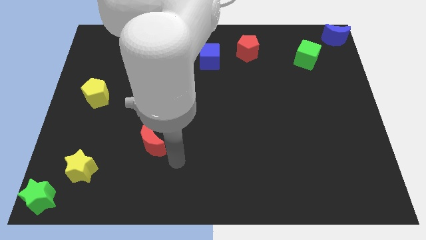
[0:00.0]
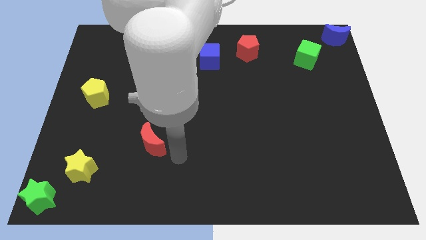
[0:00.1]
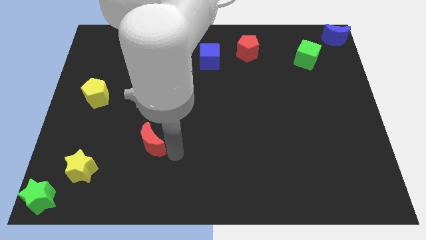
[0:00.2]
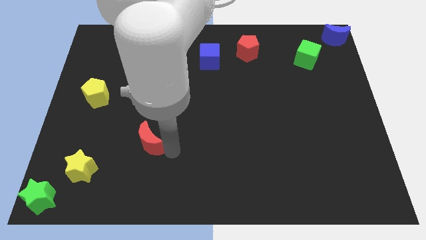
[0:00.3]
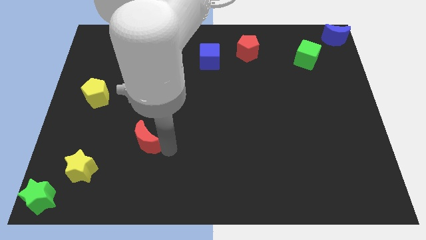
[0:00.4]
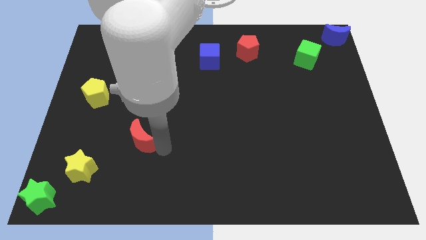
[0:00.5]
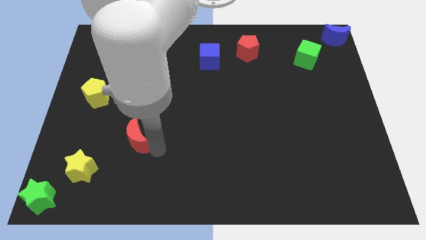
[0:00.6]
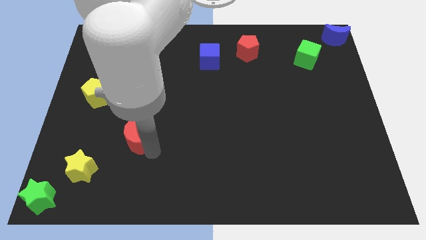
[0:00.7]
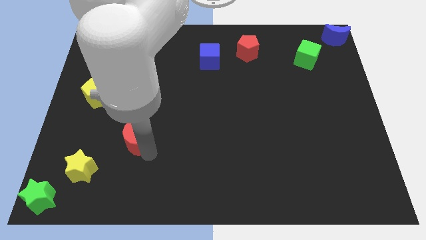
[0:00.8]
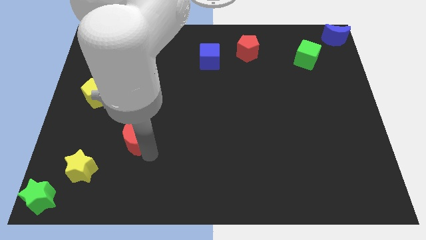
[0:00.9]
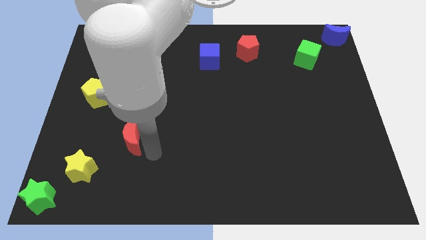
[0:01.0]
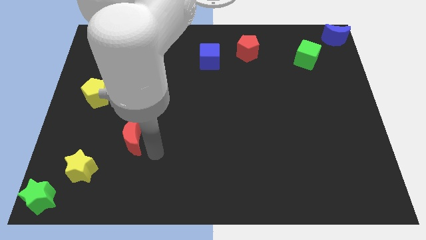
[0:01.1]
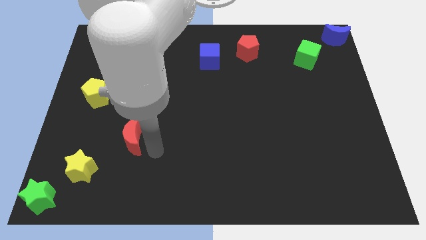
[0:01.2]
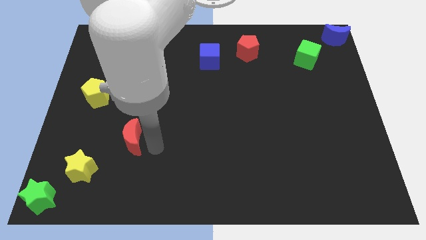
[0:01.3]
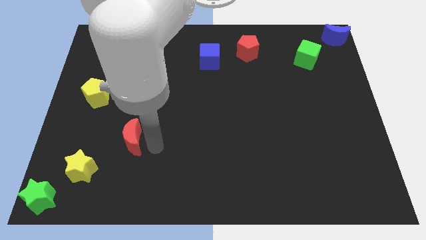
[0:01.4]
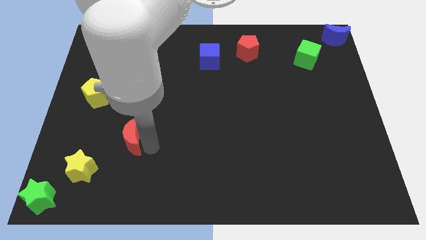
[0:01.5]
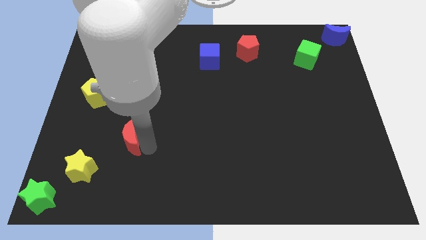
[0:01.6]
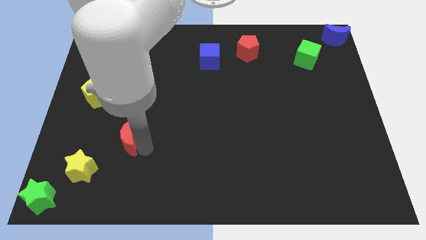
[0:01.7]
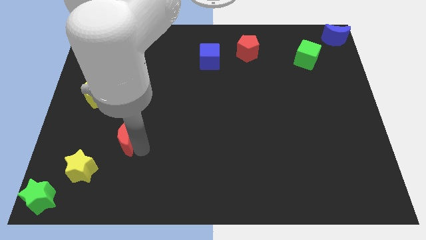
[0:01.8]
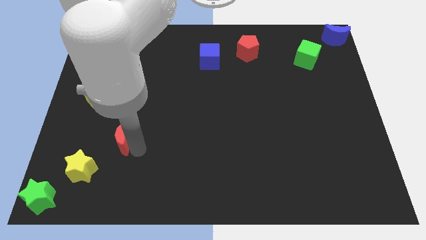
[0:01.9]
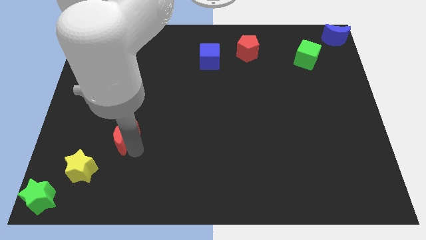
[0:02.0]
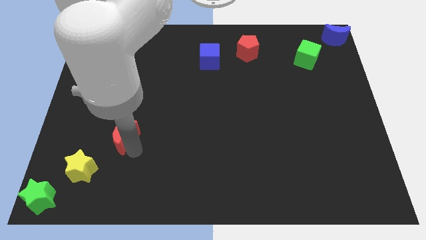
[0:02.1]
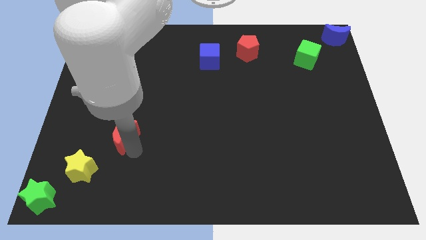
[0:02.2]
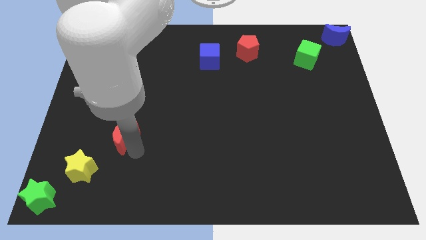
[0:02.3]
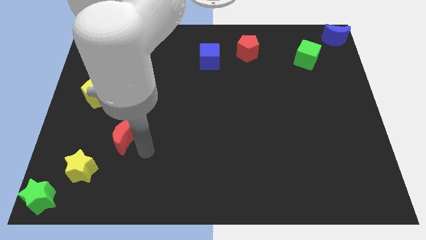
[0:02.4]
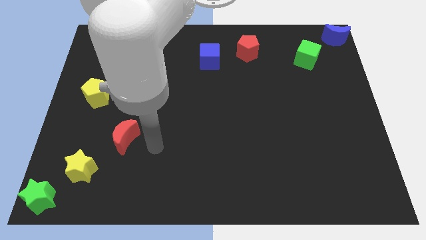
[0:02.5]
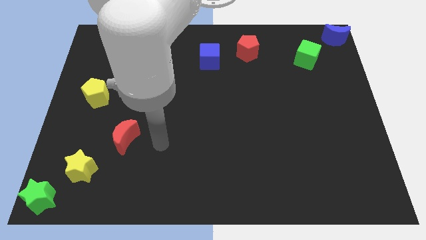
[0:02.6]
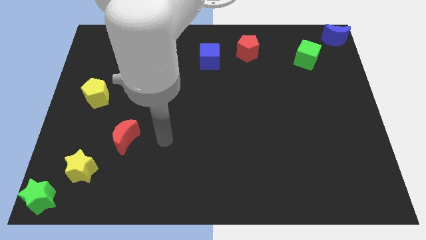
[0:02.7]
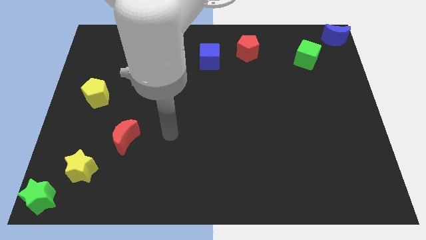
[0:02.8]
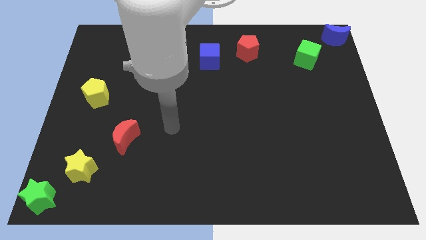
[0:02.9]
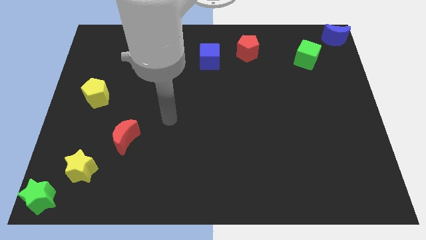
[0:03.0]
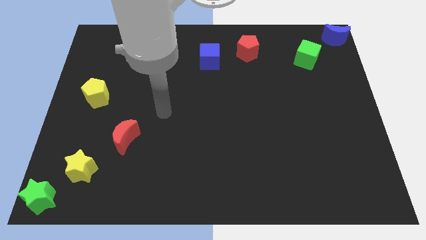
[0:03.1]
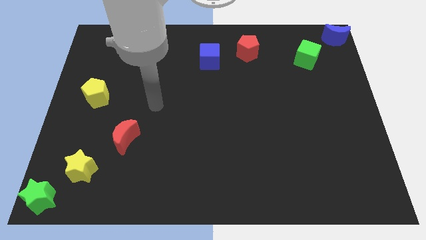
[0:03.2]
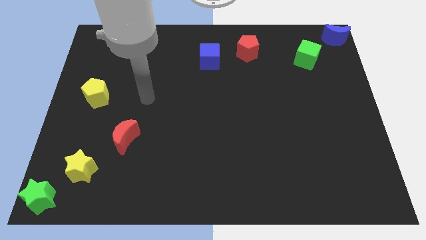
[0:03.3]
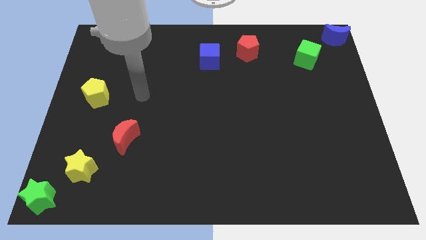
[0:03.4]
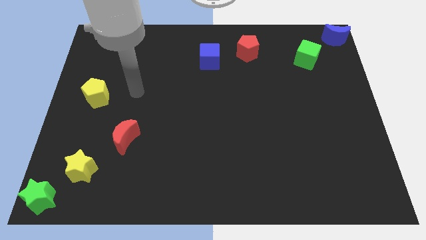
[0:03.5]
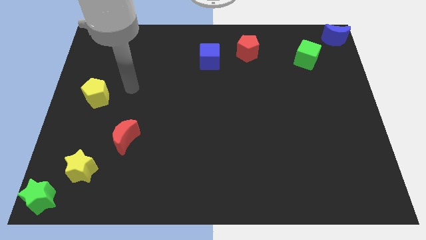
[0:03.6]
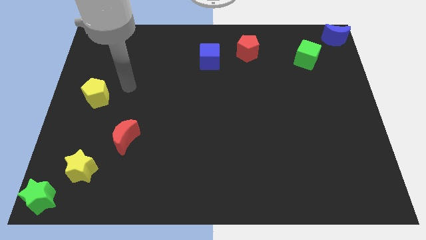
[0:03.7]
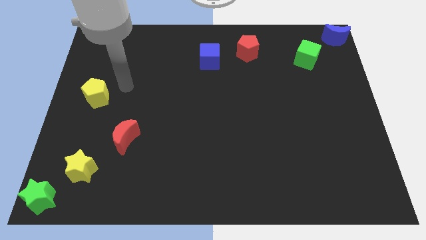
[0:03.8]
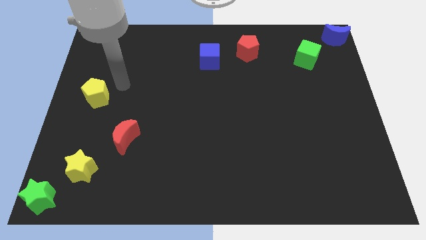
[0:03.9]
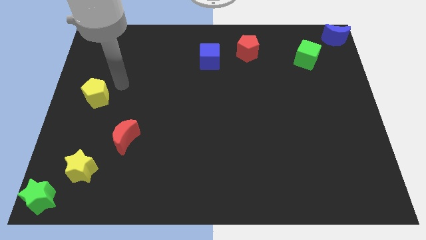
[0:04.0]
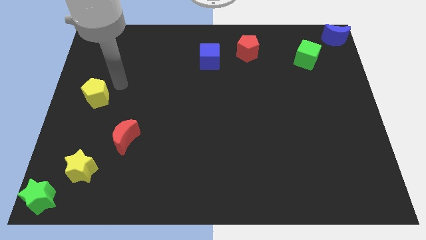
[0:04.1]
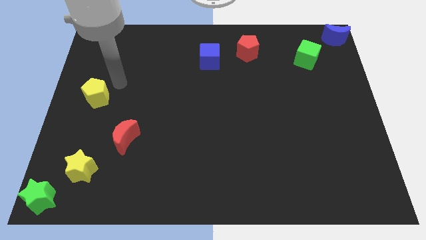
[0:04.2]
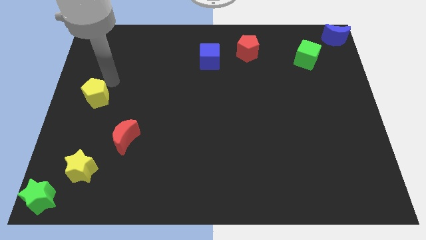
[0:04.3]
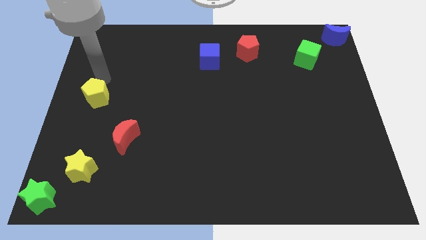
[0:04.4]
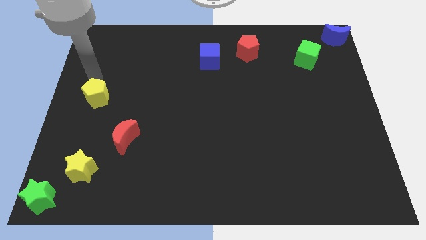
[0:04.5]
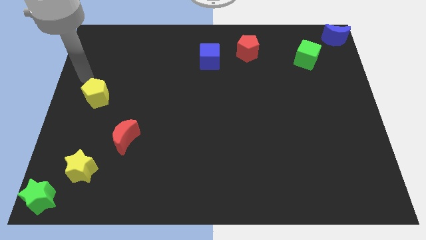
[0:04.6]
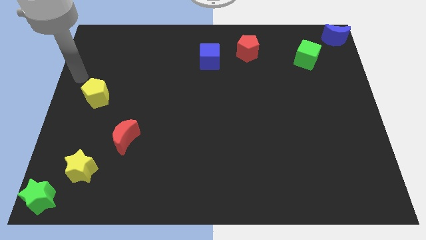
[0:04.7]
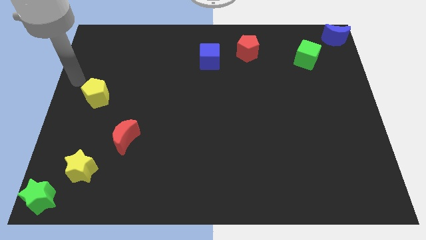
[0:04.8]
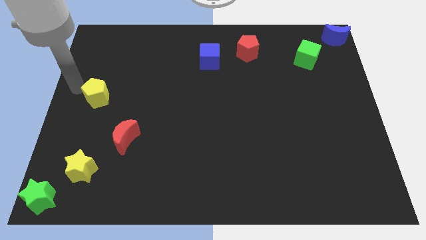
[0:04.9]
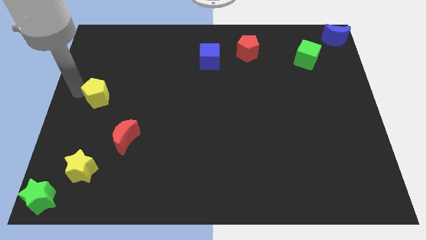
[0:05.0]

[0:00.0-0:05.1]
push the red crescent slightly to the left

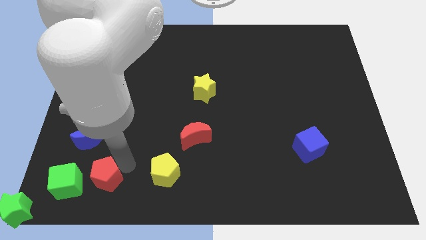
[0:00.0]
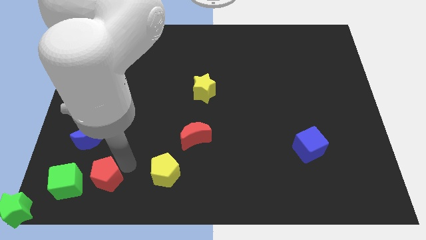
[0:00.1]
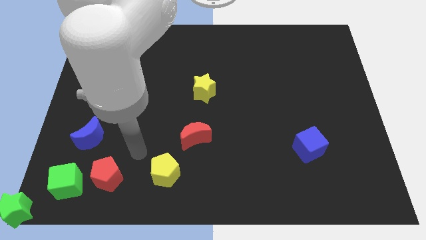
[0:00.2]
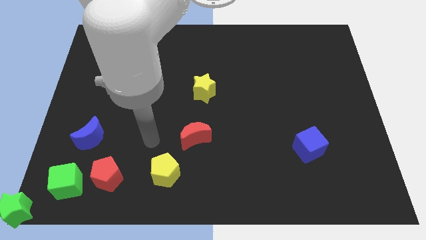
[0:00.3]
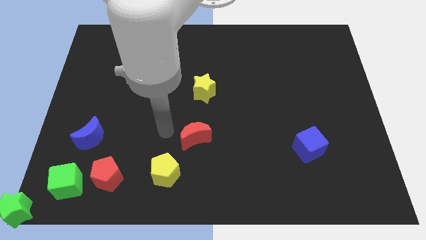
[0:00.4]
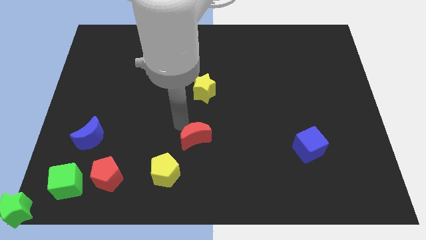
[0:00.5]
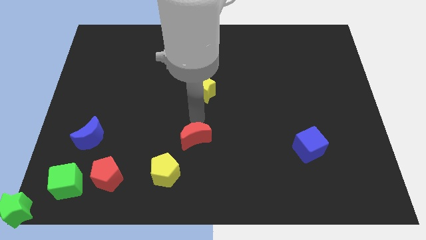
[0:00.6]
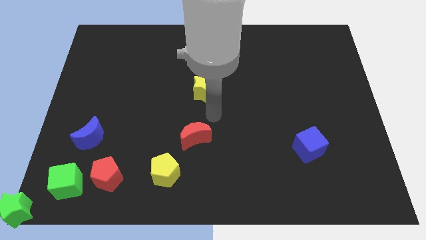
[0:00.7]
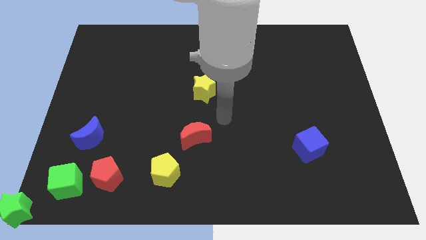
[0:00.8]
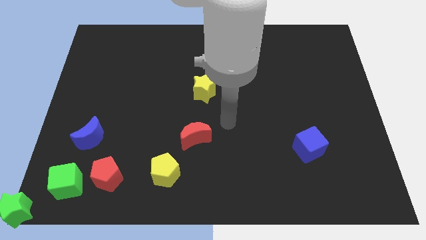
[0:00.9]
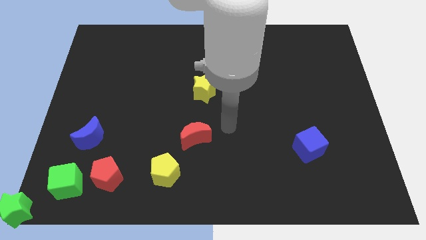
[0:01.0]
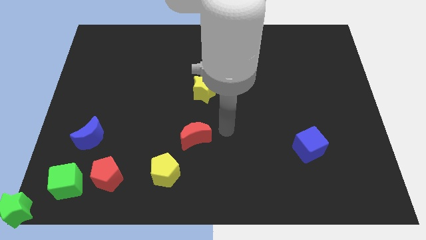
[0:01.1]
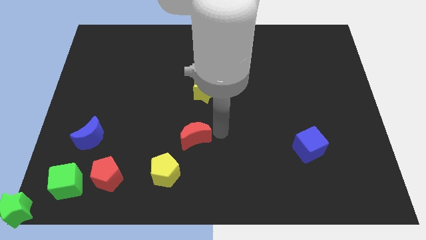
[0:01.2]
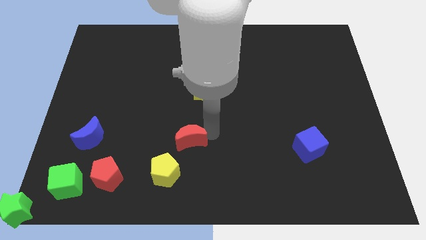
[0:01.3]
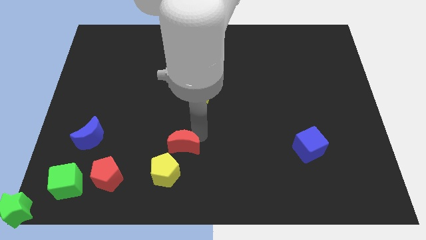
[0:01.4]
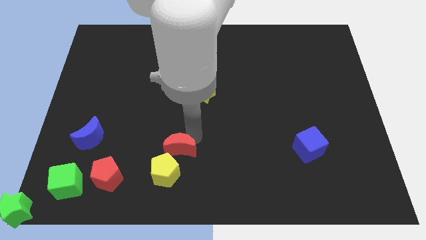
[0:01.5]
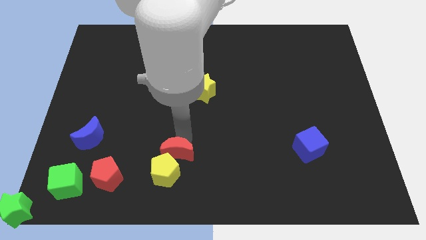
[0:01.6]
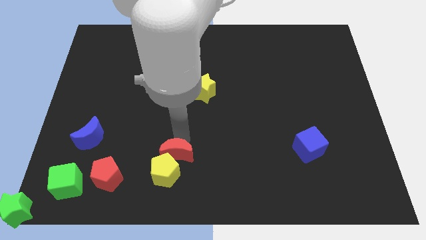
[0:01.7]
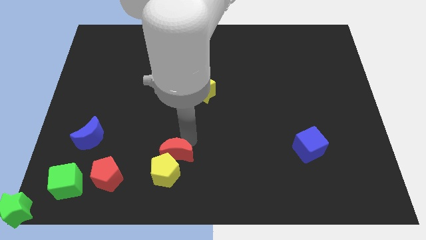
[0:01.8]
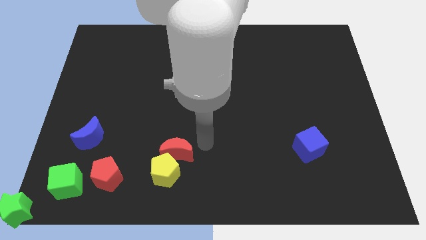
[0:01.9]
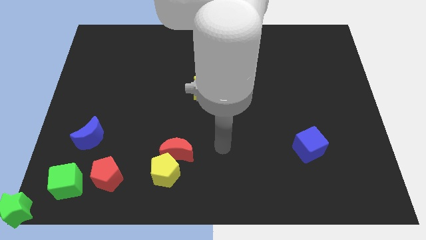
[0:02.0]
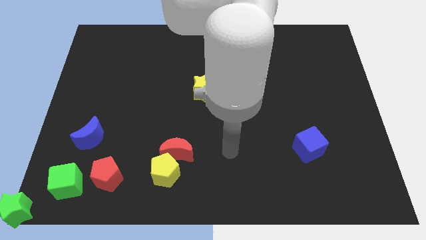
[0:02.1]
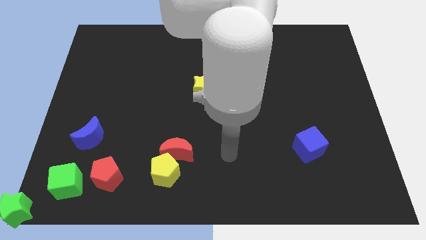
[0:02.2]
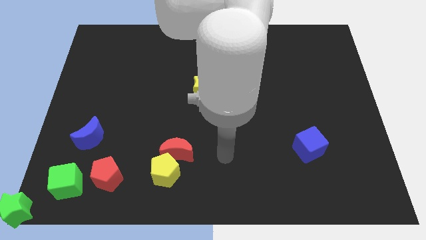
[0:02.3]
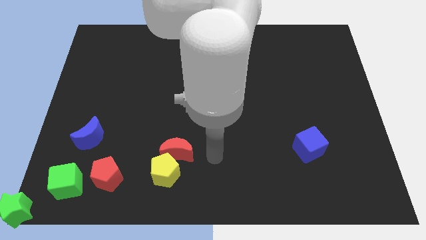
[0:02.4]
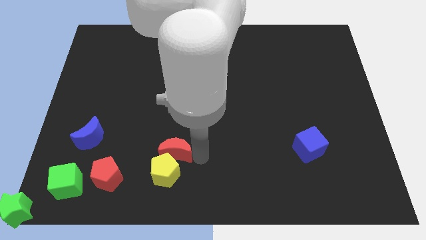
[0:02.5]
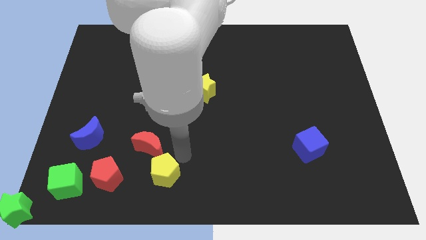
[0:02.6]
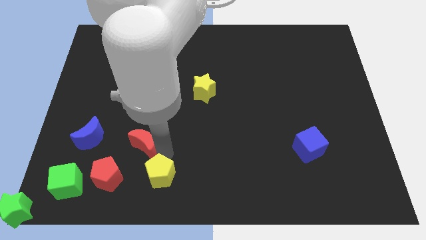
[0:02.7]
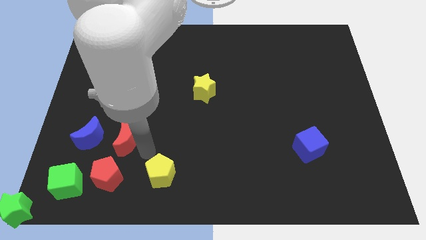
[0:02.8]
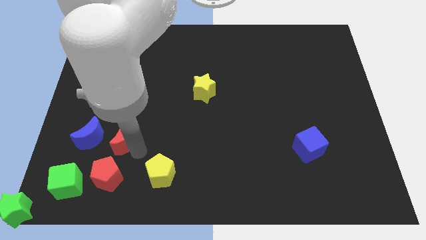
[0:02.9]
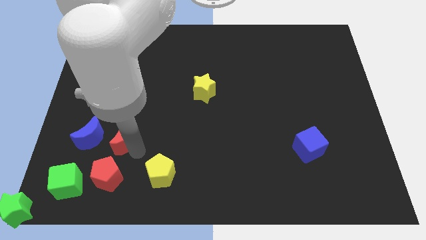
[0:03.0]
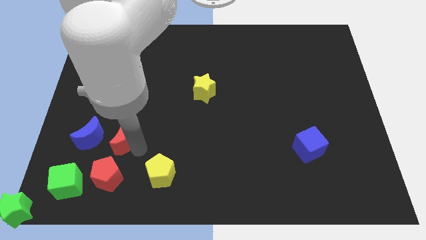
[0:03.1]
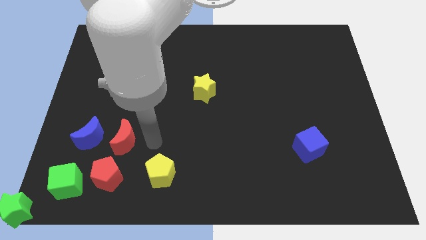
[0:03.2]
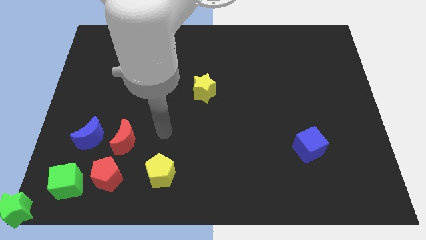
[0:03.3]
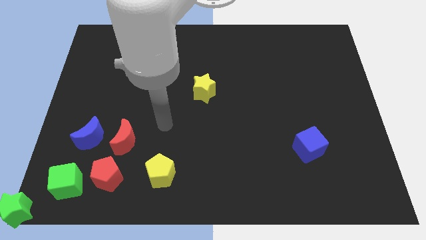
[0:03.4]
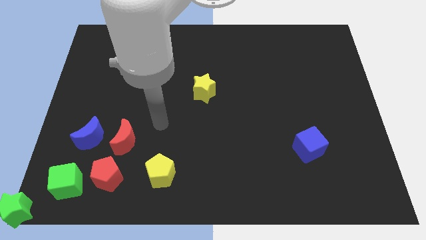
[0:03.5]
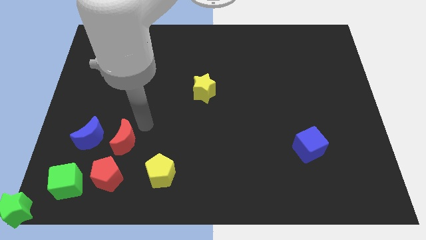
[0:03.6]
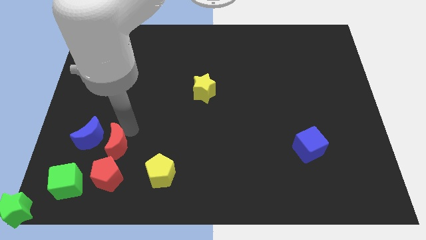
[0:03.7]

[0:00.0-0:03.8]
move the red moon to the right of the blue moon
